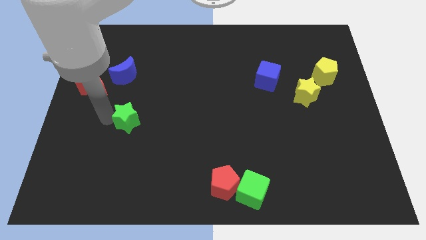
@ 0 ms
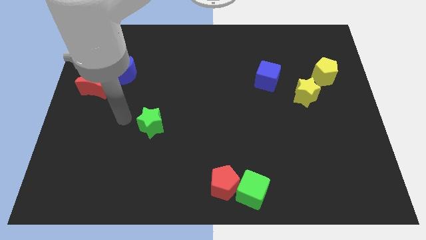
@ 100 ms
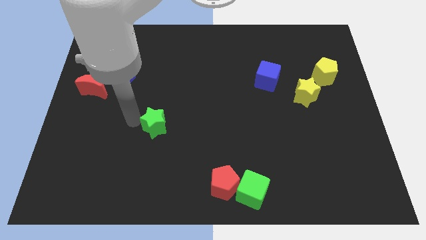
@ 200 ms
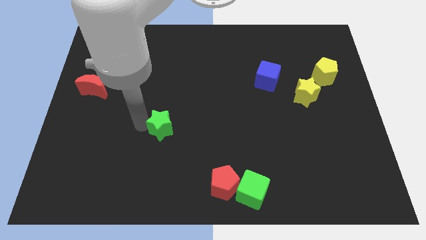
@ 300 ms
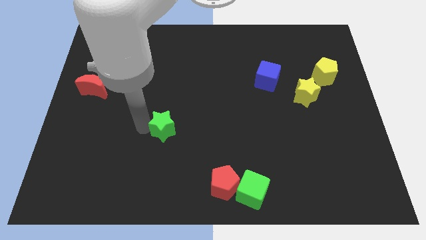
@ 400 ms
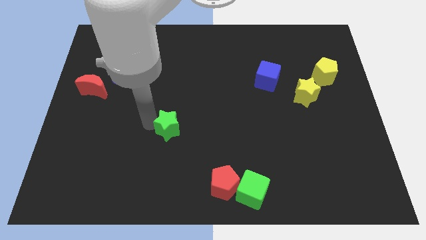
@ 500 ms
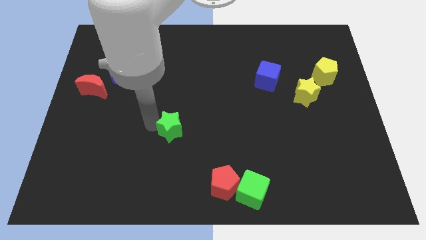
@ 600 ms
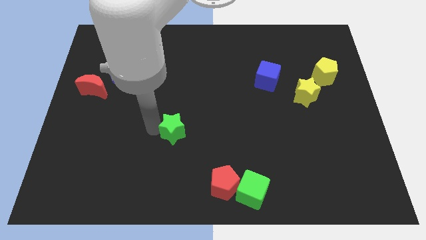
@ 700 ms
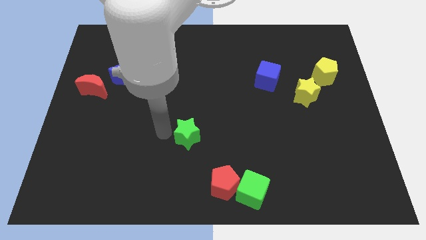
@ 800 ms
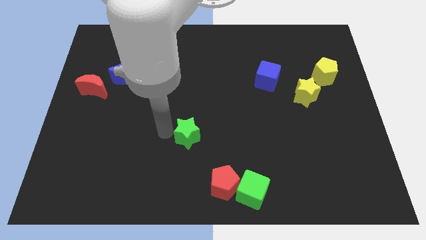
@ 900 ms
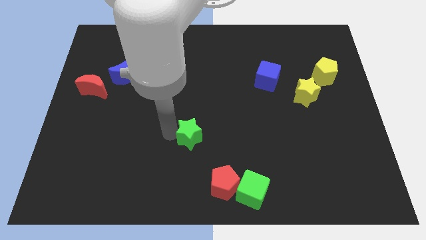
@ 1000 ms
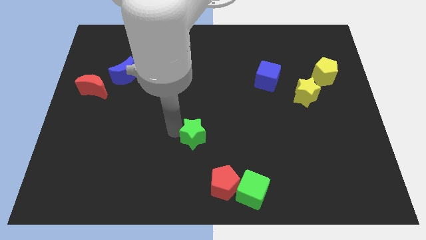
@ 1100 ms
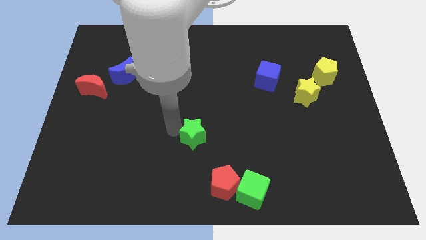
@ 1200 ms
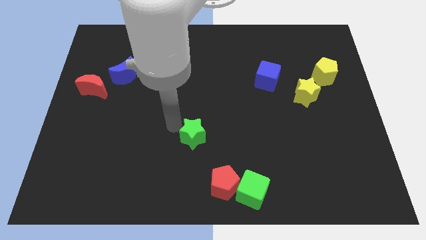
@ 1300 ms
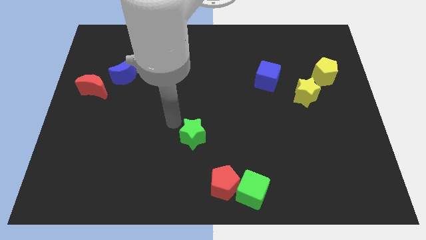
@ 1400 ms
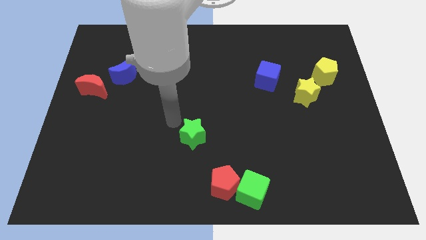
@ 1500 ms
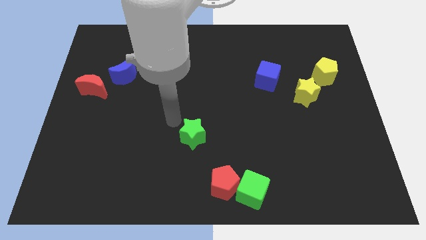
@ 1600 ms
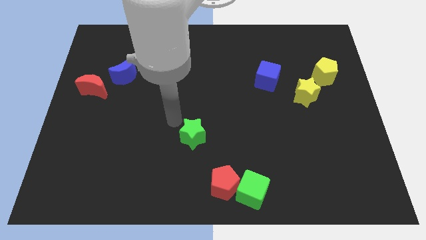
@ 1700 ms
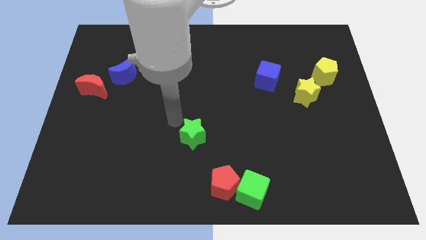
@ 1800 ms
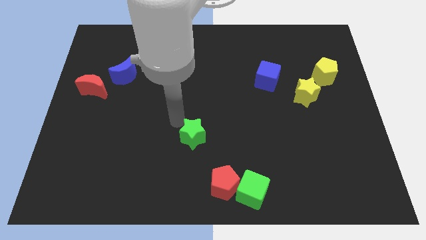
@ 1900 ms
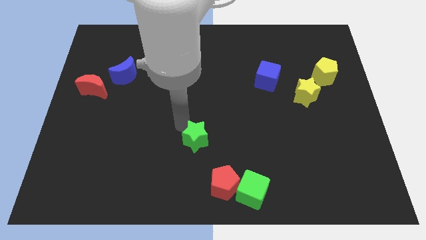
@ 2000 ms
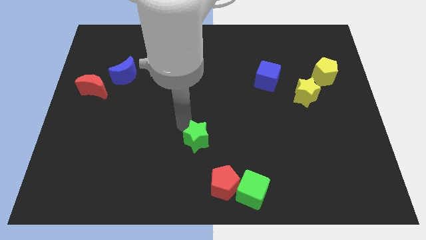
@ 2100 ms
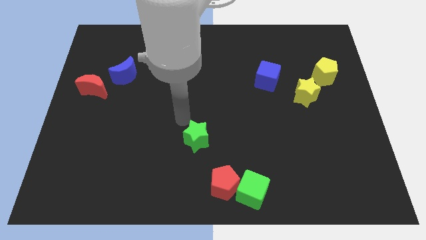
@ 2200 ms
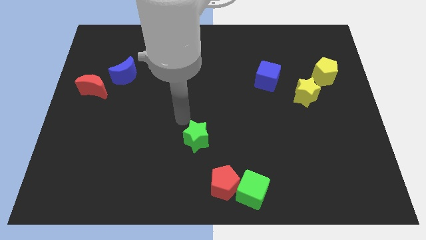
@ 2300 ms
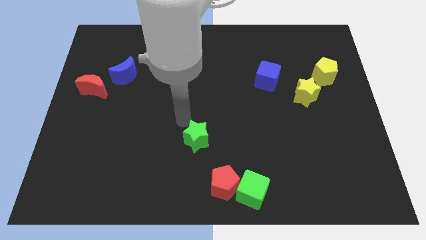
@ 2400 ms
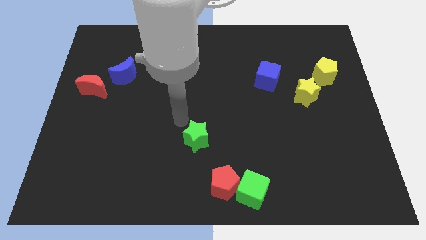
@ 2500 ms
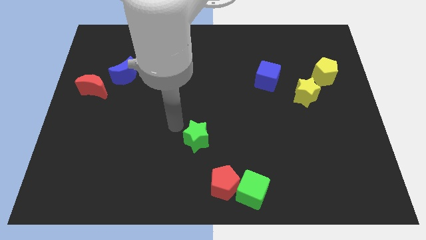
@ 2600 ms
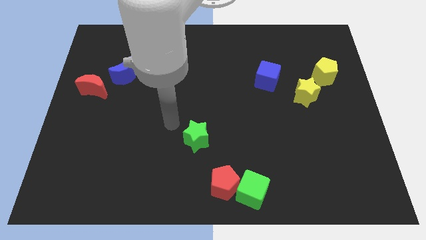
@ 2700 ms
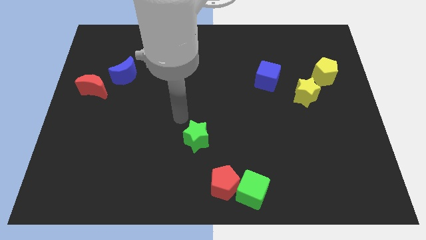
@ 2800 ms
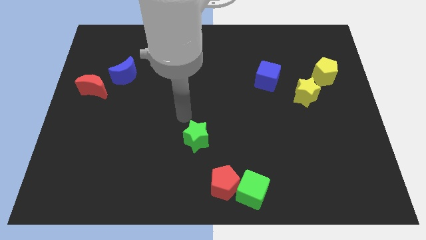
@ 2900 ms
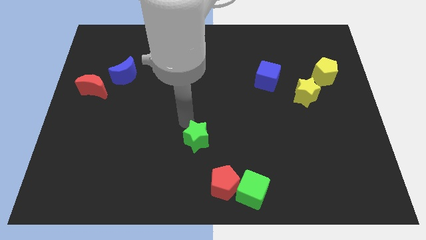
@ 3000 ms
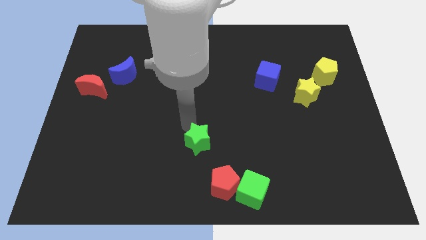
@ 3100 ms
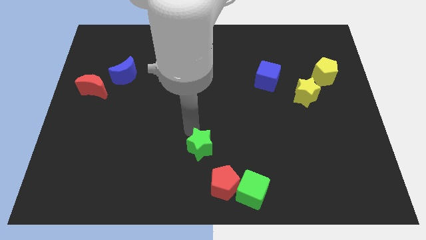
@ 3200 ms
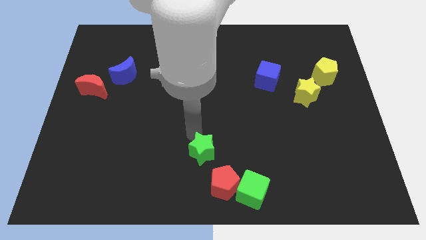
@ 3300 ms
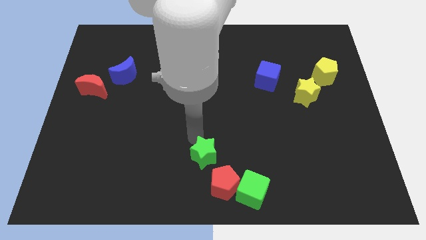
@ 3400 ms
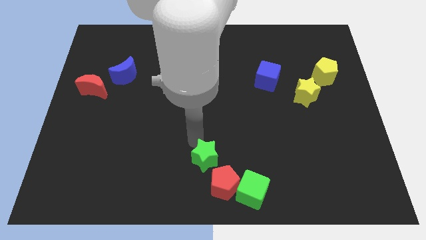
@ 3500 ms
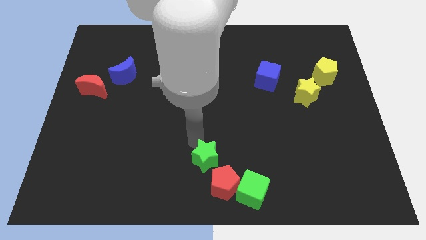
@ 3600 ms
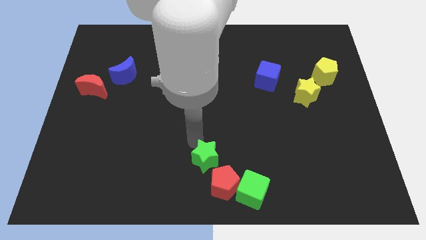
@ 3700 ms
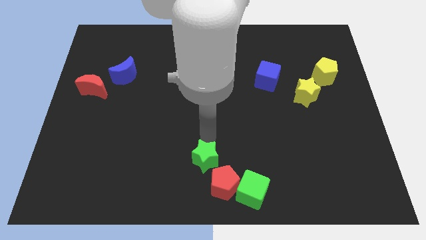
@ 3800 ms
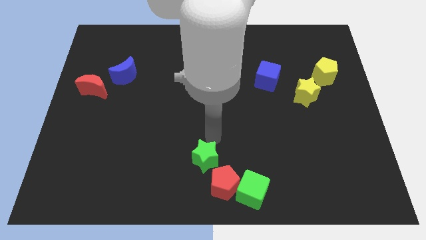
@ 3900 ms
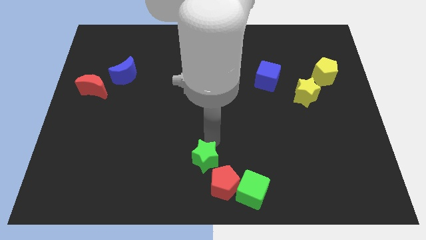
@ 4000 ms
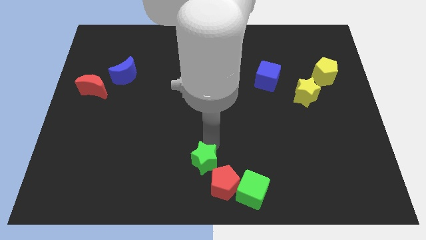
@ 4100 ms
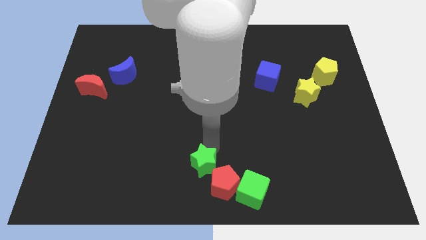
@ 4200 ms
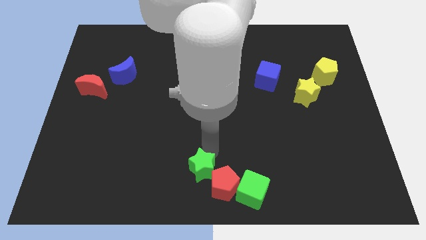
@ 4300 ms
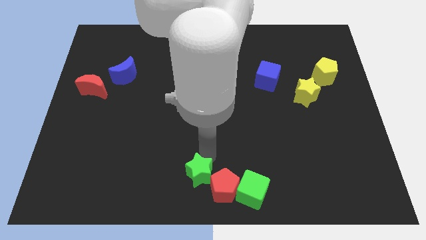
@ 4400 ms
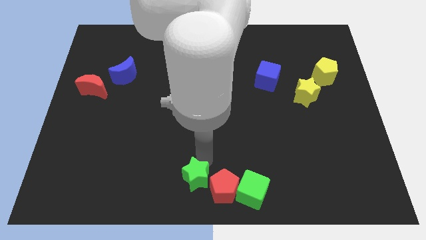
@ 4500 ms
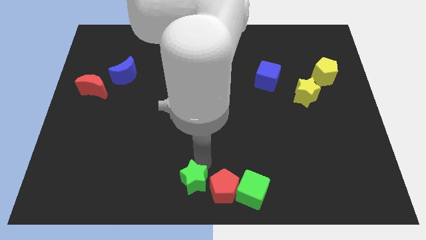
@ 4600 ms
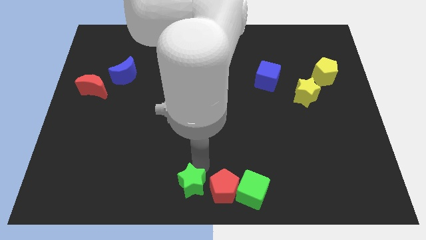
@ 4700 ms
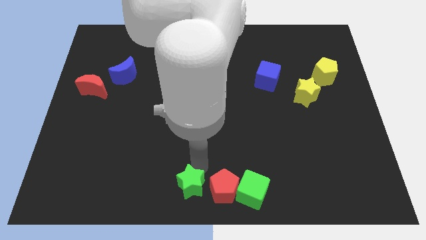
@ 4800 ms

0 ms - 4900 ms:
move the green star left side to the red pentagon

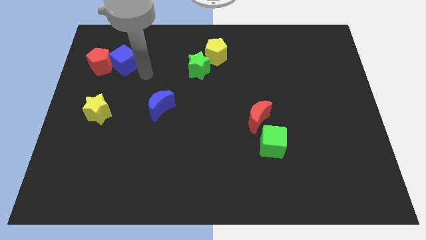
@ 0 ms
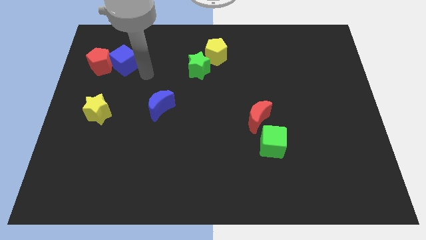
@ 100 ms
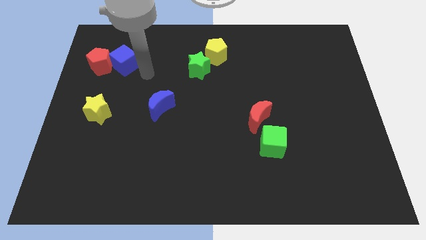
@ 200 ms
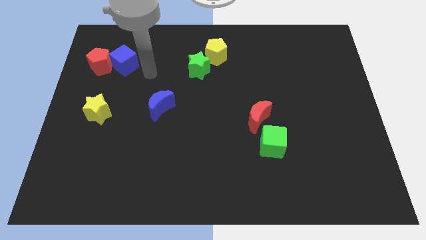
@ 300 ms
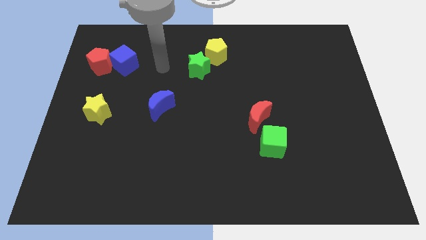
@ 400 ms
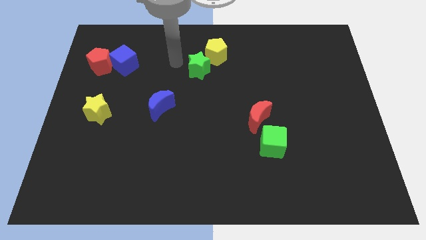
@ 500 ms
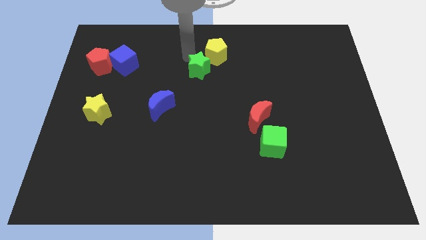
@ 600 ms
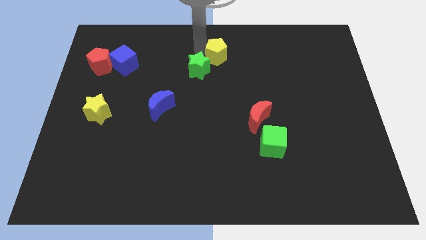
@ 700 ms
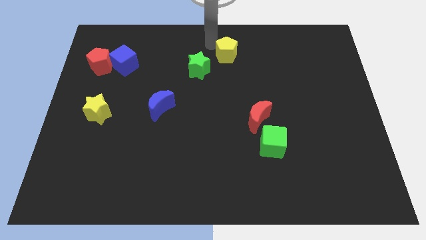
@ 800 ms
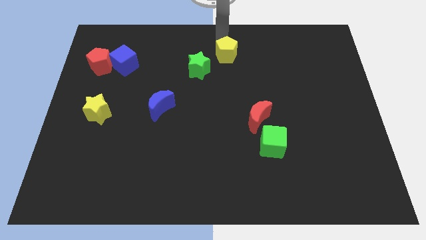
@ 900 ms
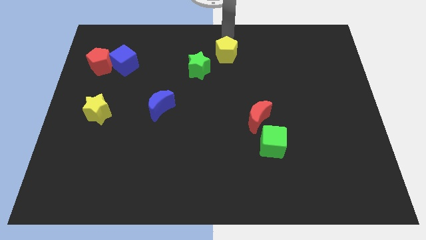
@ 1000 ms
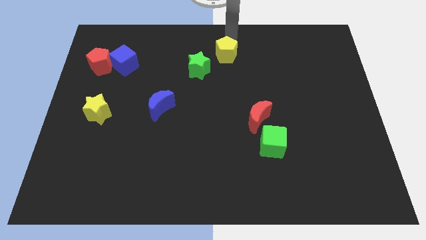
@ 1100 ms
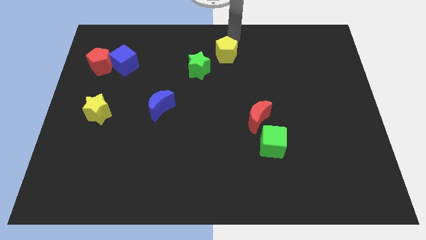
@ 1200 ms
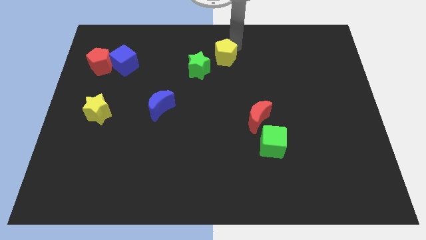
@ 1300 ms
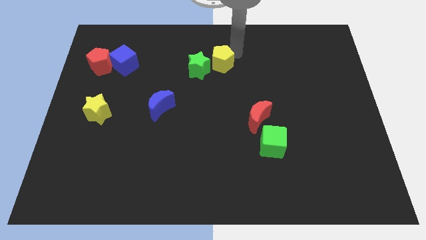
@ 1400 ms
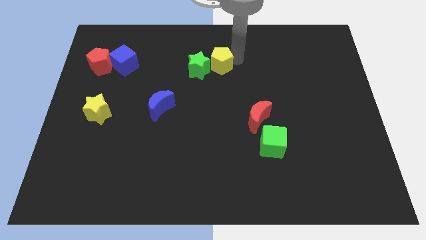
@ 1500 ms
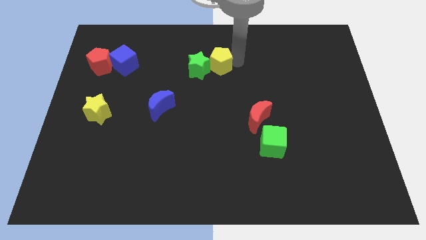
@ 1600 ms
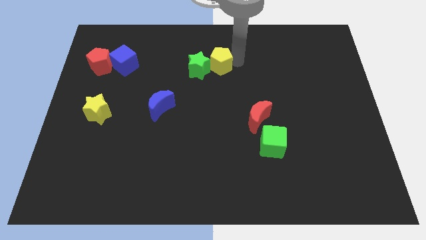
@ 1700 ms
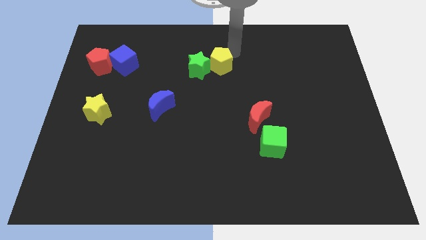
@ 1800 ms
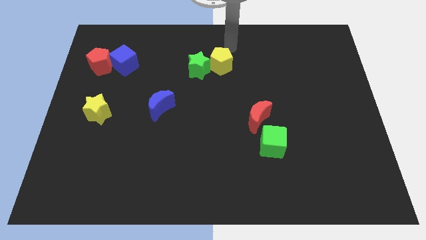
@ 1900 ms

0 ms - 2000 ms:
place the yellow pentagon to the right side of the green star

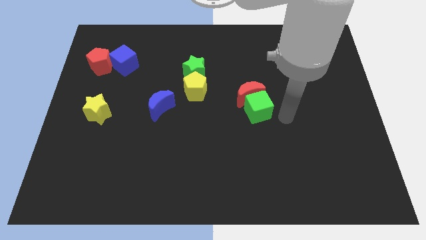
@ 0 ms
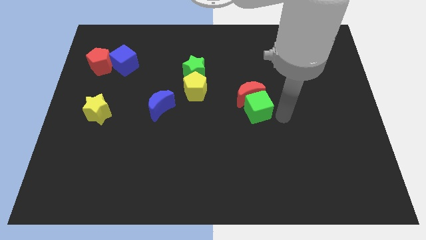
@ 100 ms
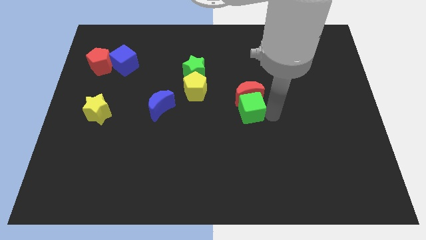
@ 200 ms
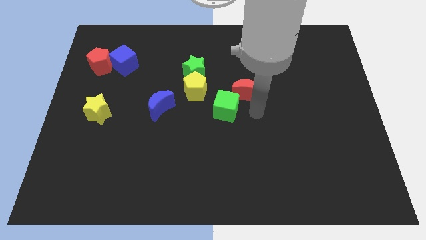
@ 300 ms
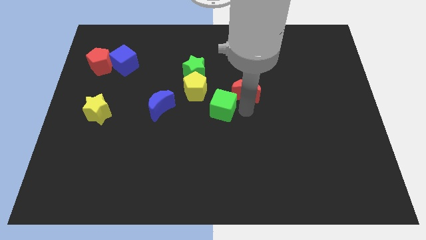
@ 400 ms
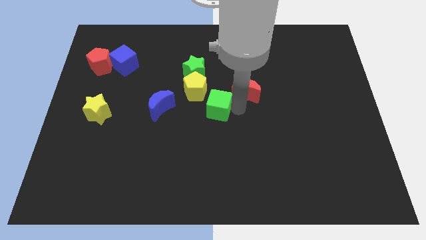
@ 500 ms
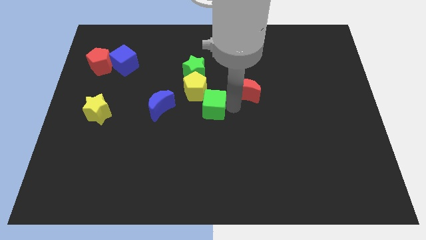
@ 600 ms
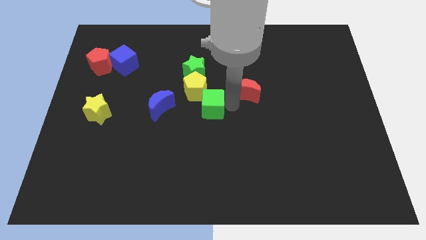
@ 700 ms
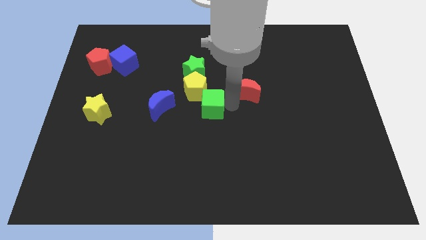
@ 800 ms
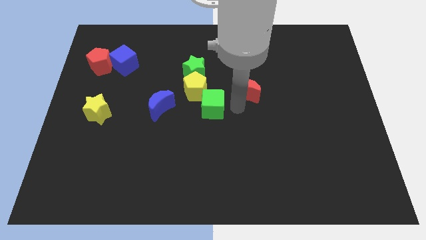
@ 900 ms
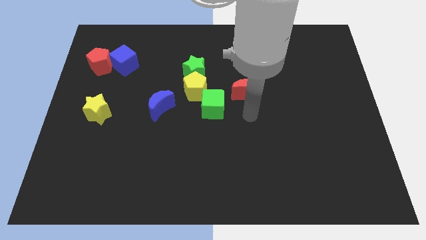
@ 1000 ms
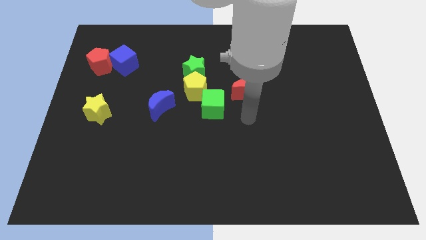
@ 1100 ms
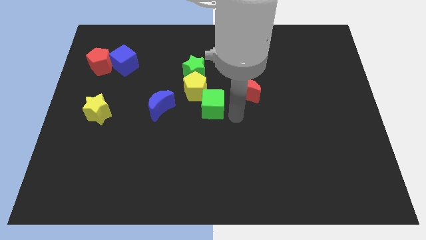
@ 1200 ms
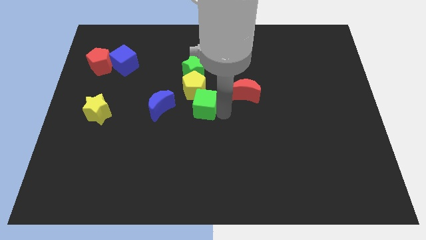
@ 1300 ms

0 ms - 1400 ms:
place the green cube to the bottom right of the yellow pentagon

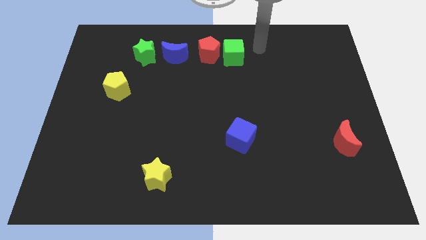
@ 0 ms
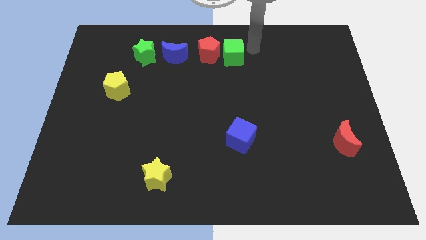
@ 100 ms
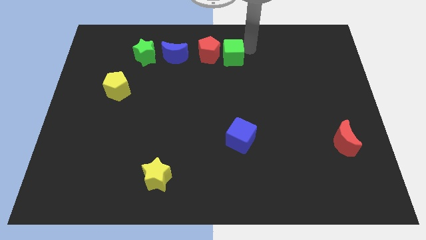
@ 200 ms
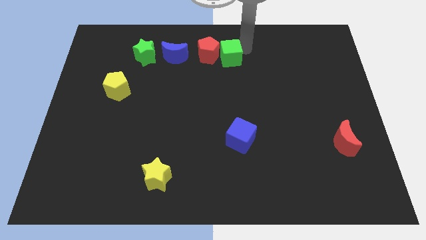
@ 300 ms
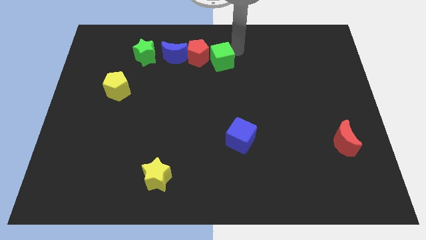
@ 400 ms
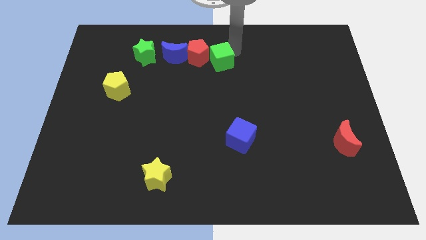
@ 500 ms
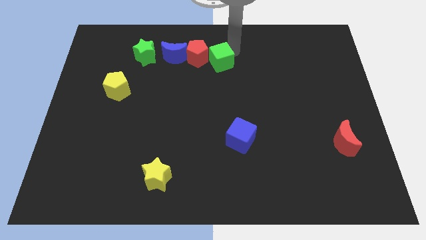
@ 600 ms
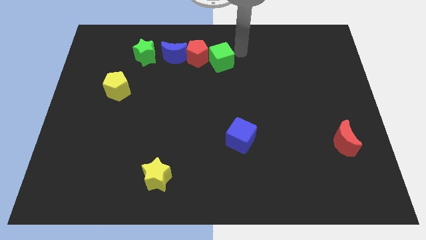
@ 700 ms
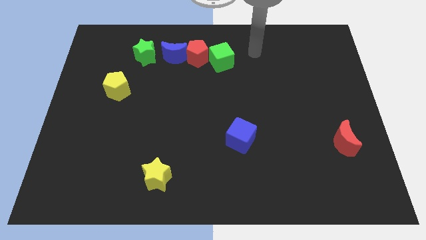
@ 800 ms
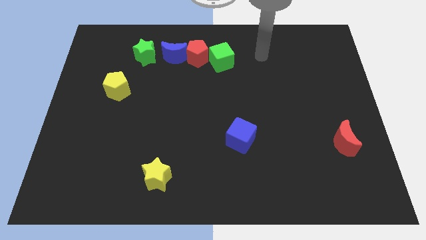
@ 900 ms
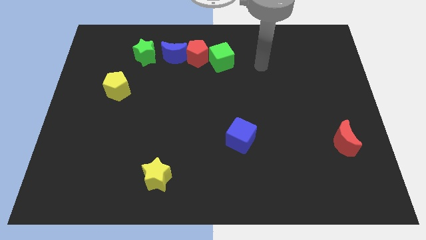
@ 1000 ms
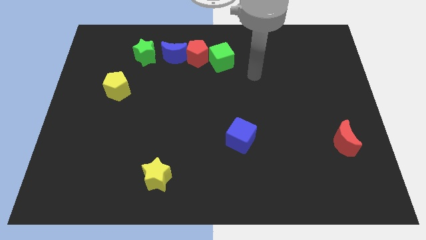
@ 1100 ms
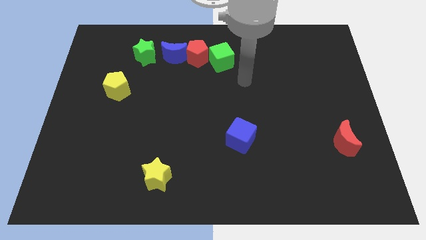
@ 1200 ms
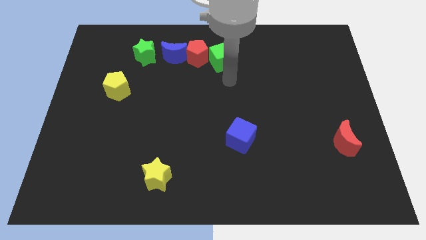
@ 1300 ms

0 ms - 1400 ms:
push the green cube into the red pentagon
